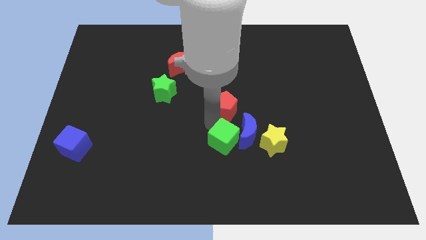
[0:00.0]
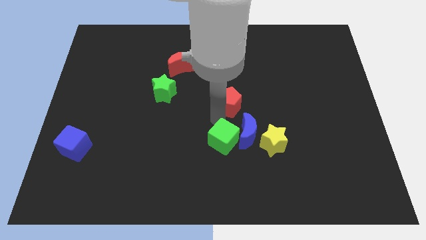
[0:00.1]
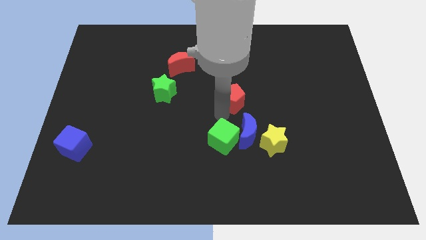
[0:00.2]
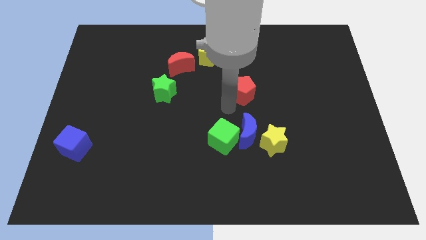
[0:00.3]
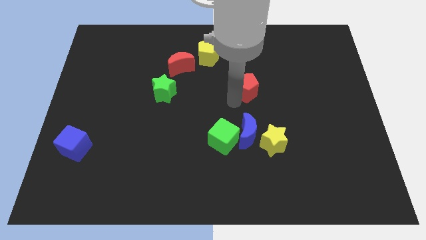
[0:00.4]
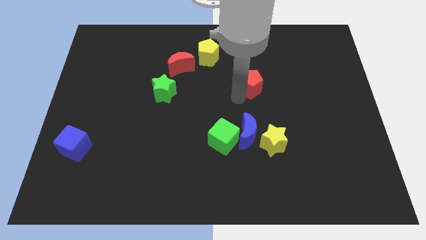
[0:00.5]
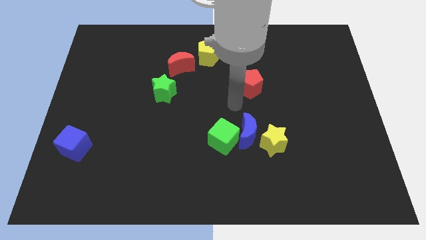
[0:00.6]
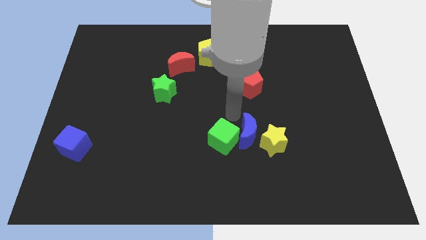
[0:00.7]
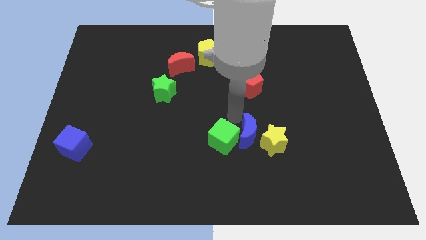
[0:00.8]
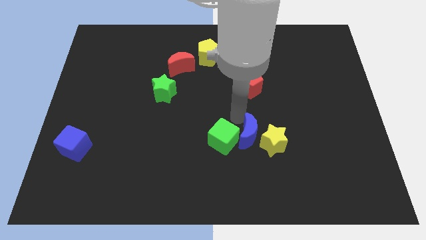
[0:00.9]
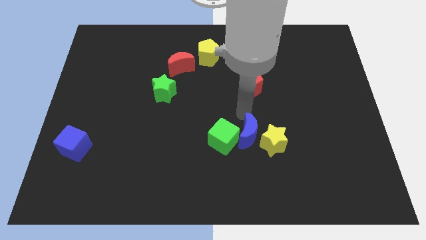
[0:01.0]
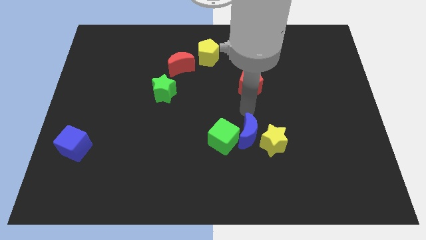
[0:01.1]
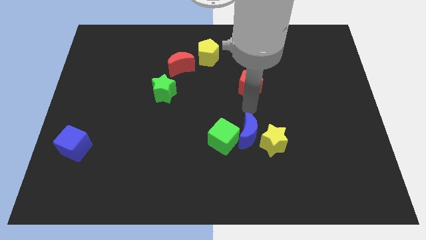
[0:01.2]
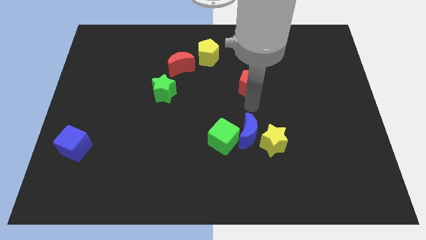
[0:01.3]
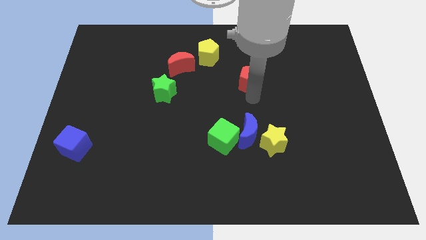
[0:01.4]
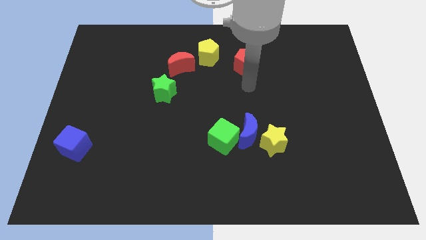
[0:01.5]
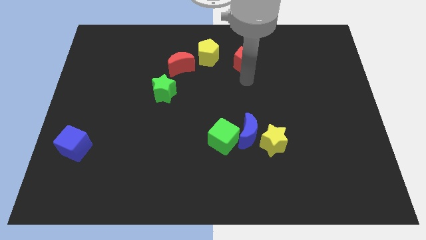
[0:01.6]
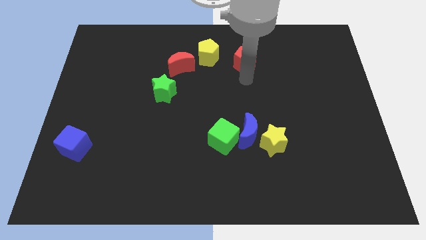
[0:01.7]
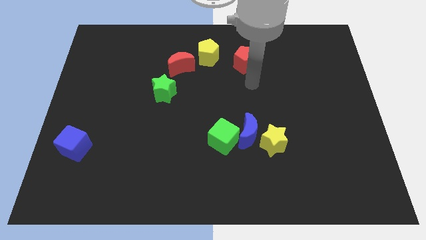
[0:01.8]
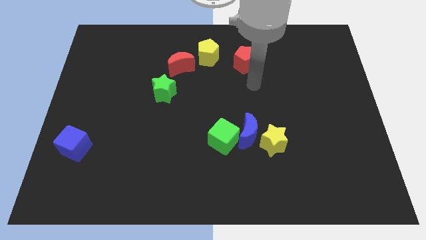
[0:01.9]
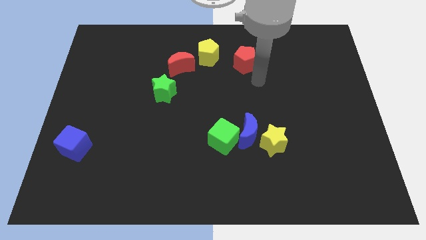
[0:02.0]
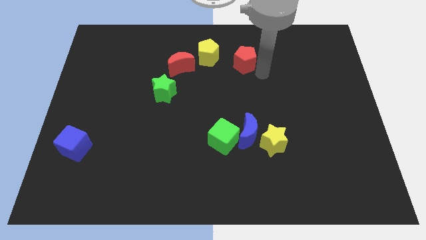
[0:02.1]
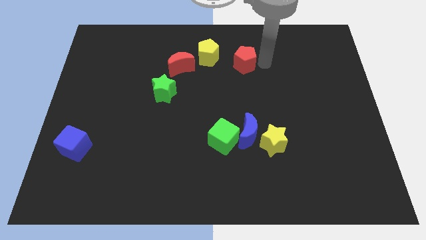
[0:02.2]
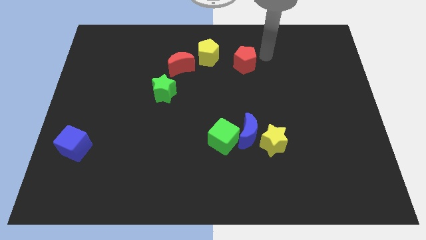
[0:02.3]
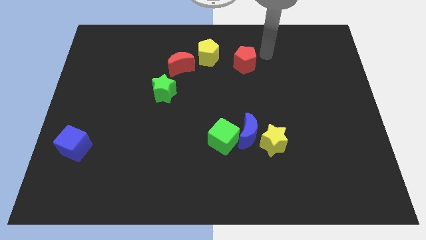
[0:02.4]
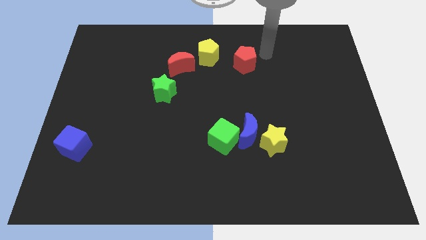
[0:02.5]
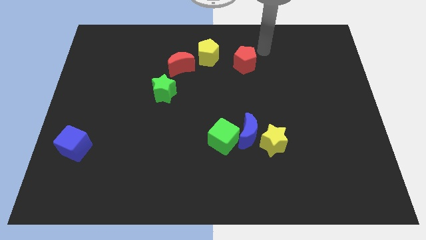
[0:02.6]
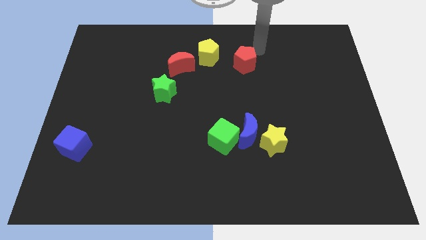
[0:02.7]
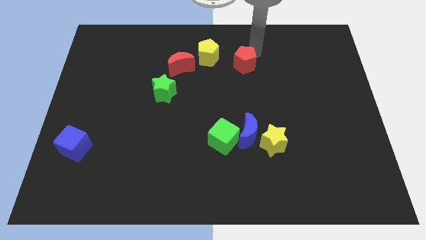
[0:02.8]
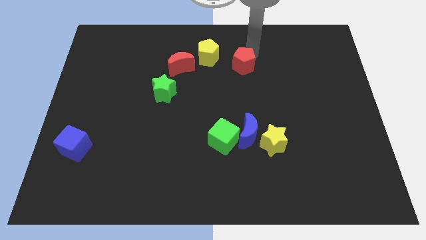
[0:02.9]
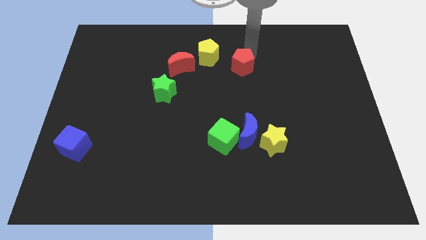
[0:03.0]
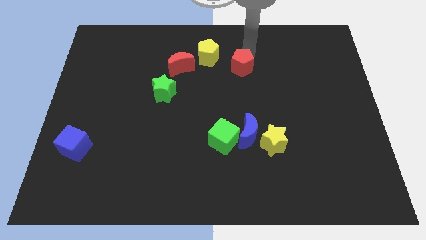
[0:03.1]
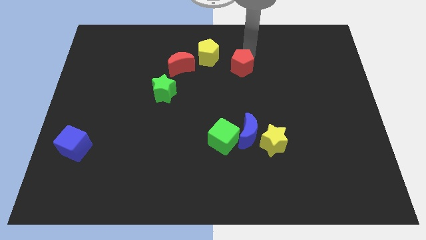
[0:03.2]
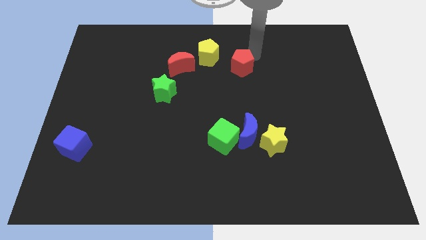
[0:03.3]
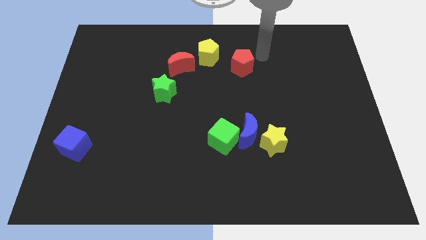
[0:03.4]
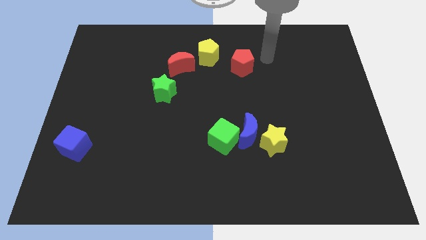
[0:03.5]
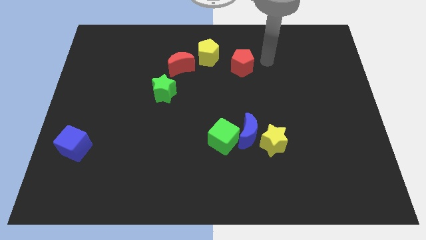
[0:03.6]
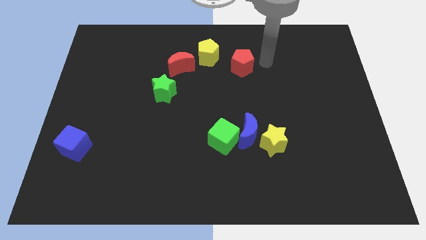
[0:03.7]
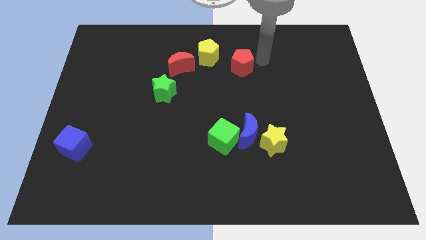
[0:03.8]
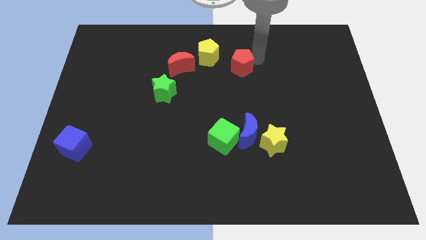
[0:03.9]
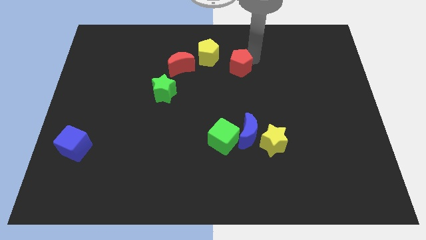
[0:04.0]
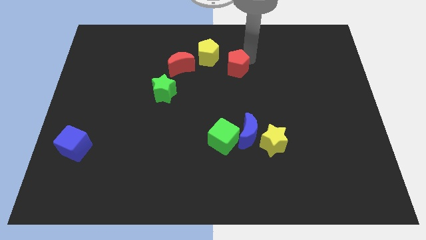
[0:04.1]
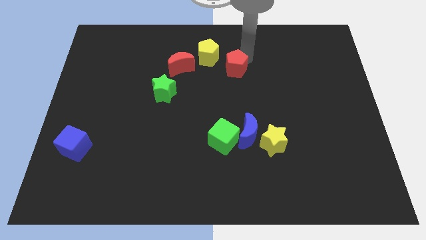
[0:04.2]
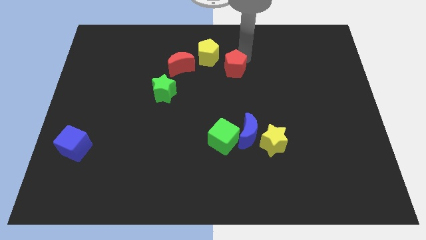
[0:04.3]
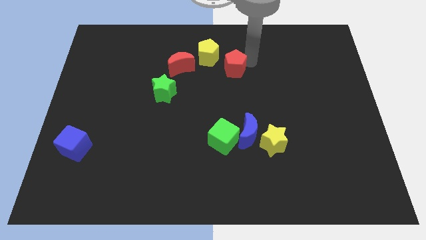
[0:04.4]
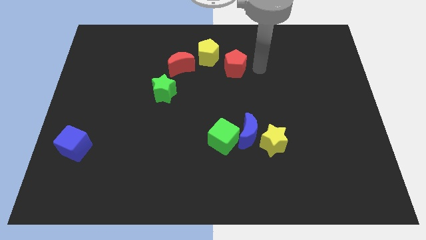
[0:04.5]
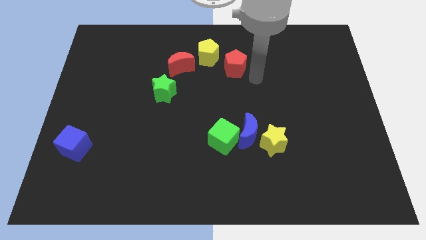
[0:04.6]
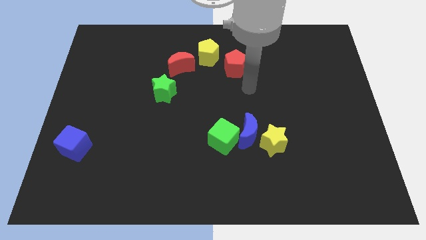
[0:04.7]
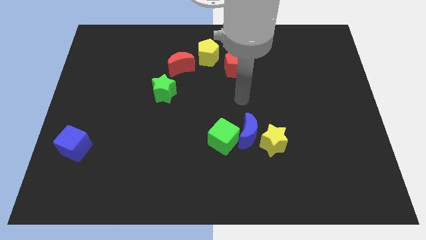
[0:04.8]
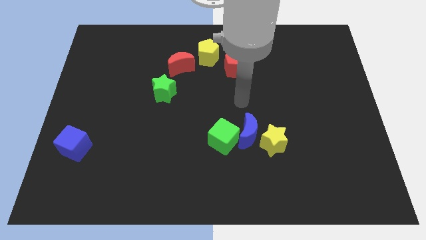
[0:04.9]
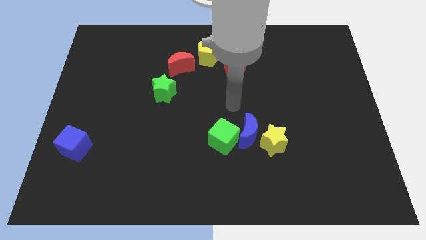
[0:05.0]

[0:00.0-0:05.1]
move the red pentagon at the bottom right of the yellow pentagon

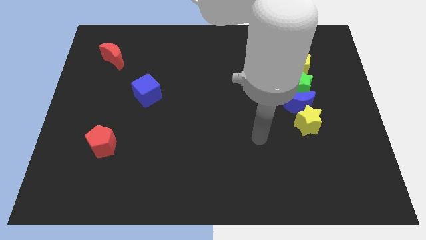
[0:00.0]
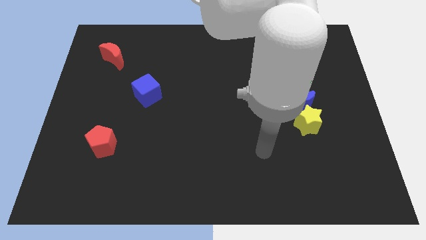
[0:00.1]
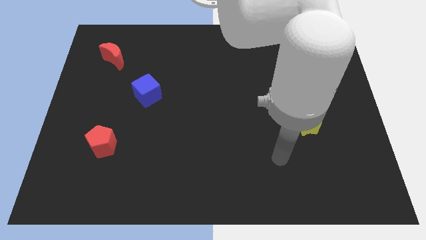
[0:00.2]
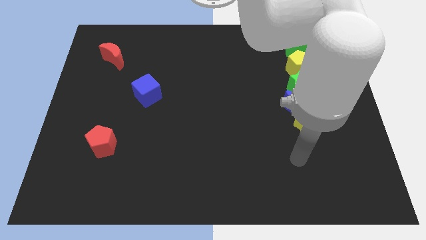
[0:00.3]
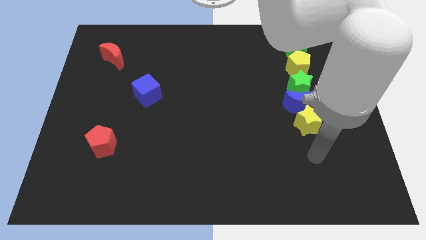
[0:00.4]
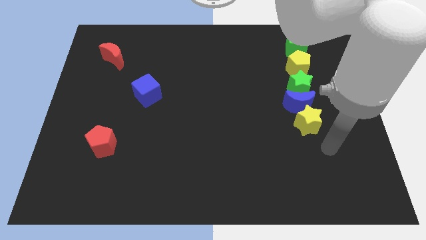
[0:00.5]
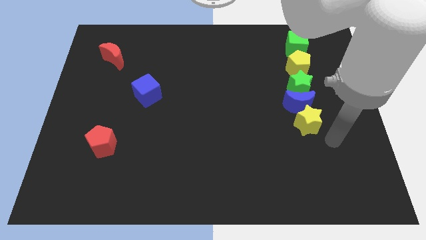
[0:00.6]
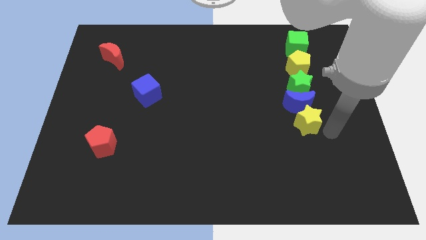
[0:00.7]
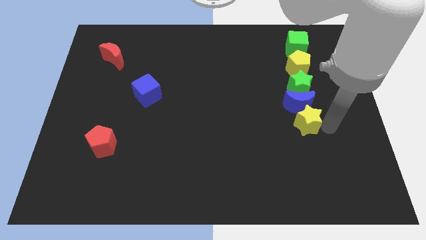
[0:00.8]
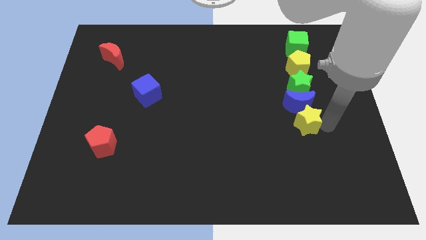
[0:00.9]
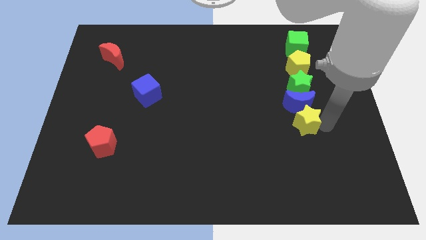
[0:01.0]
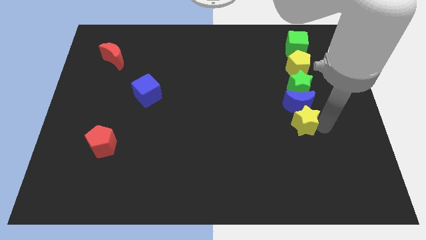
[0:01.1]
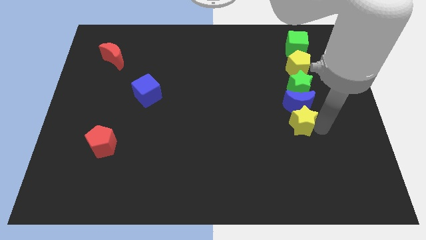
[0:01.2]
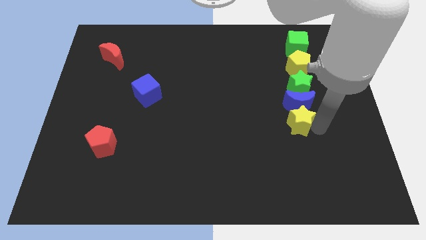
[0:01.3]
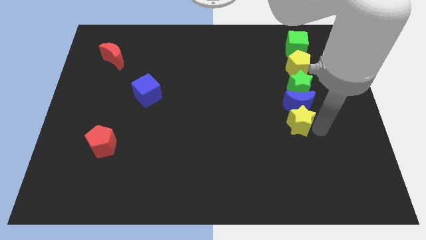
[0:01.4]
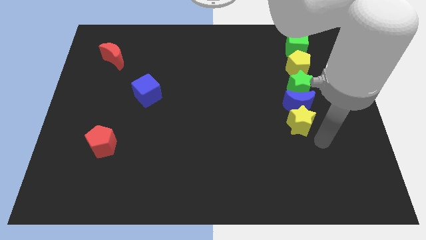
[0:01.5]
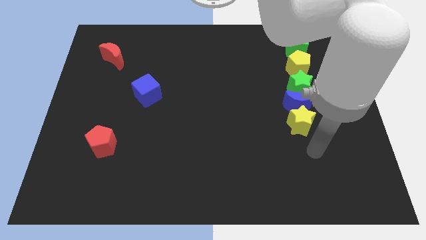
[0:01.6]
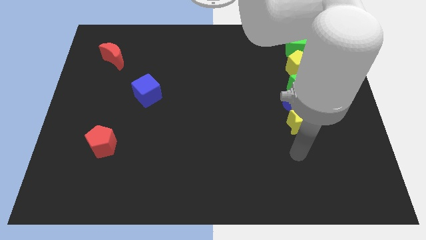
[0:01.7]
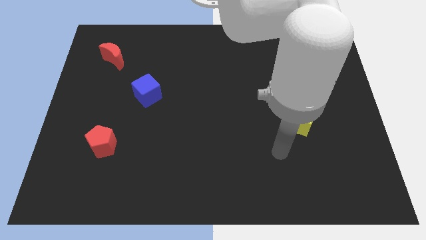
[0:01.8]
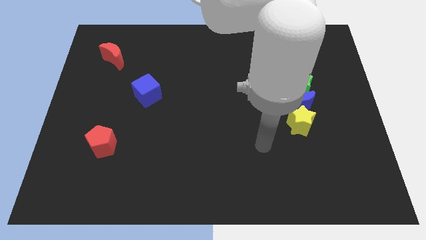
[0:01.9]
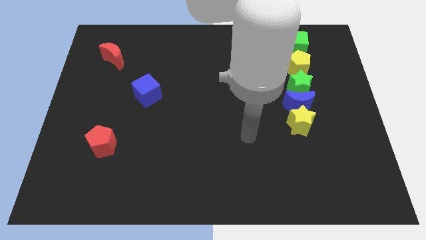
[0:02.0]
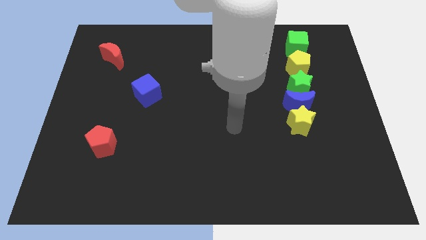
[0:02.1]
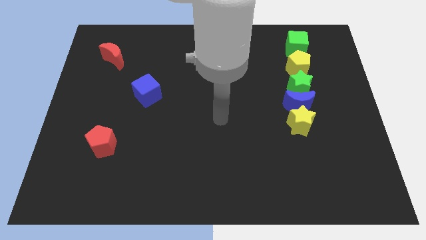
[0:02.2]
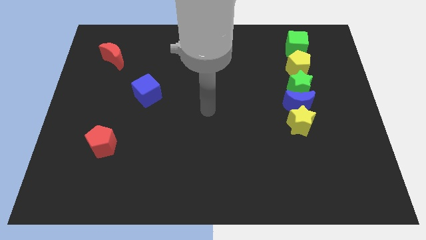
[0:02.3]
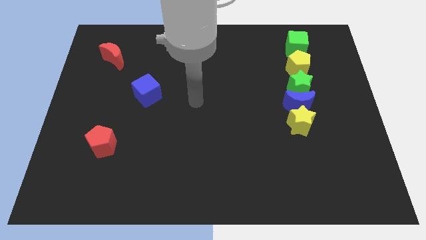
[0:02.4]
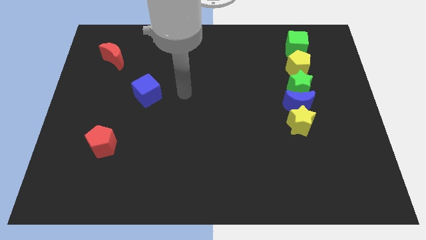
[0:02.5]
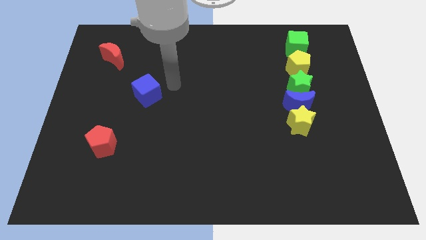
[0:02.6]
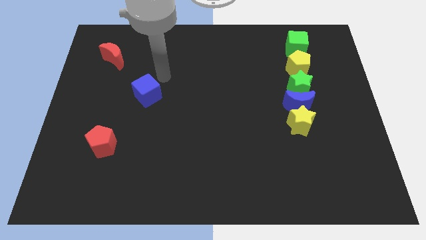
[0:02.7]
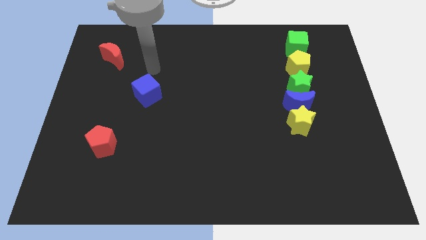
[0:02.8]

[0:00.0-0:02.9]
adjust the yellow star under the blue crescent

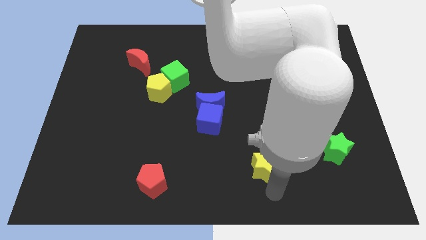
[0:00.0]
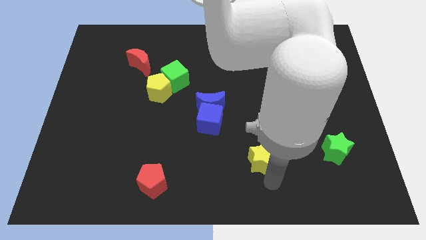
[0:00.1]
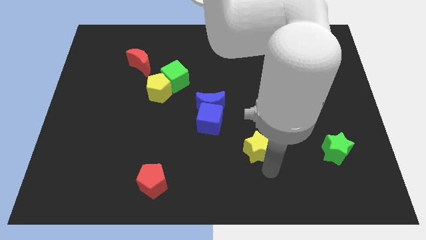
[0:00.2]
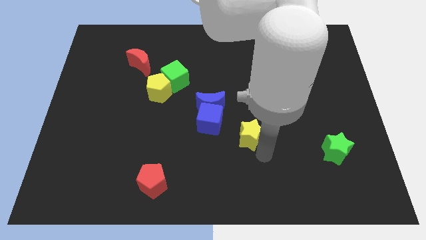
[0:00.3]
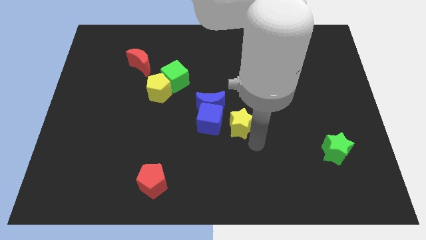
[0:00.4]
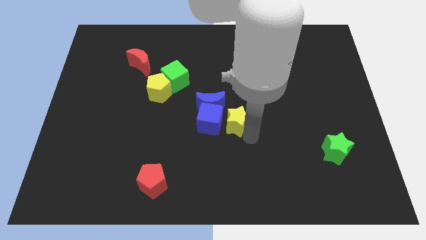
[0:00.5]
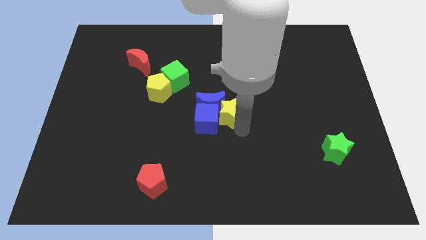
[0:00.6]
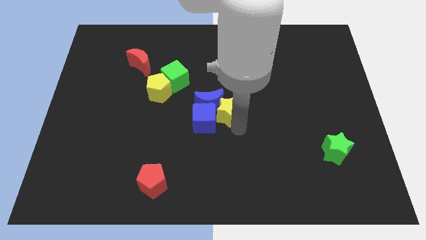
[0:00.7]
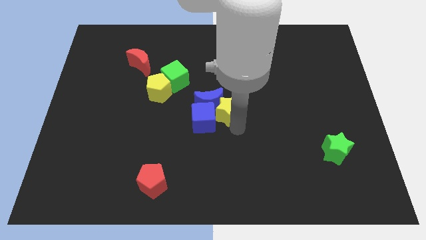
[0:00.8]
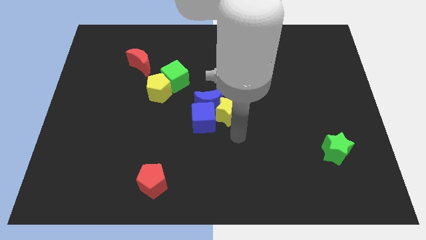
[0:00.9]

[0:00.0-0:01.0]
push the yellow star into the blue moon
